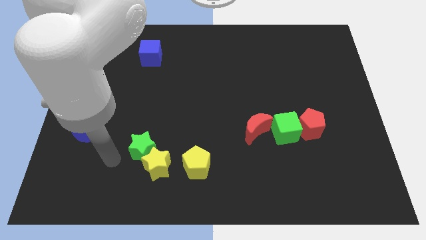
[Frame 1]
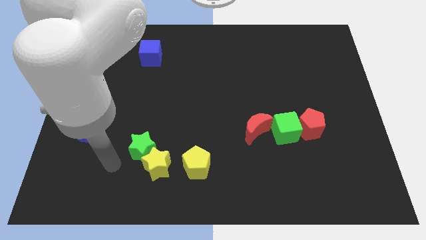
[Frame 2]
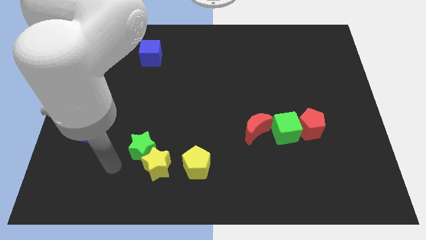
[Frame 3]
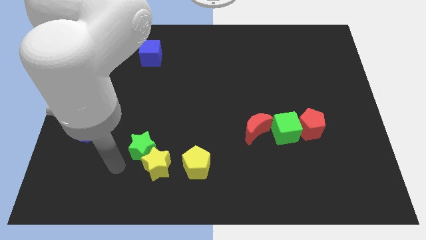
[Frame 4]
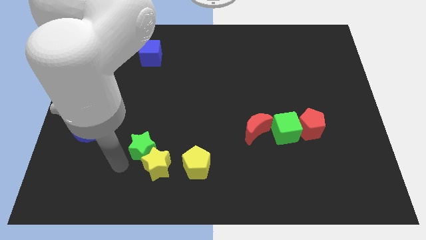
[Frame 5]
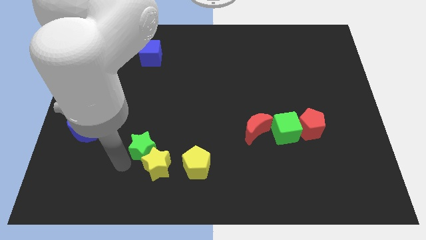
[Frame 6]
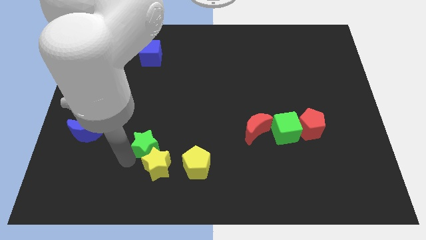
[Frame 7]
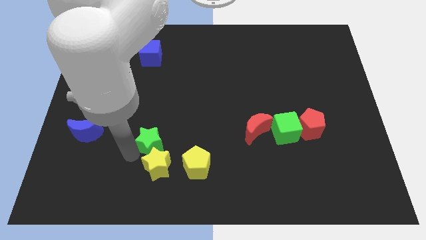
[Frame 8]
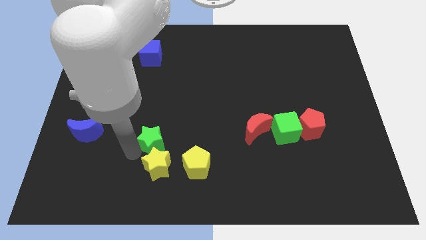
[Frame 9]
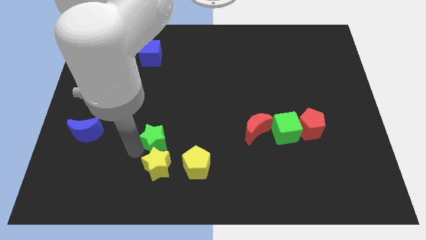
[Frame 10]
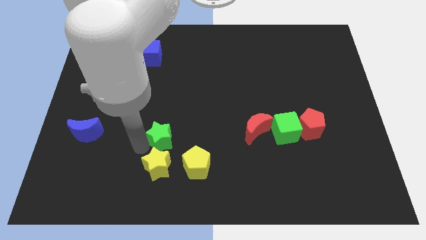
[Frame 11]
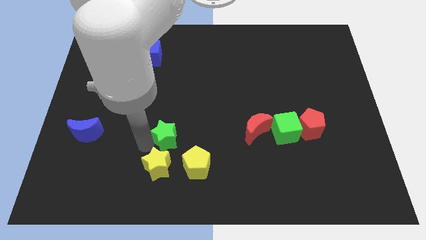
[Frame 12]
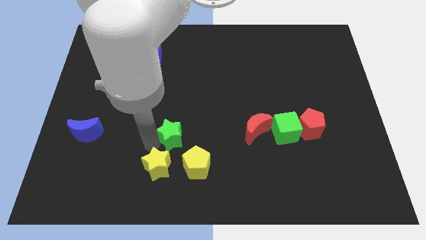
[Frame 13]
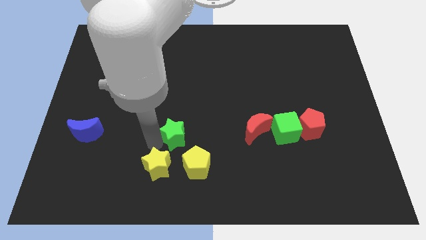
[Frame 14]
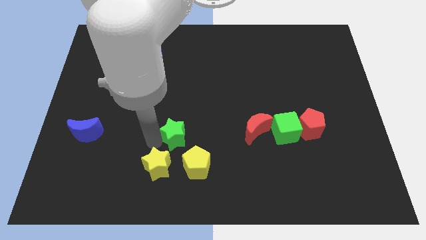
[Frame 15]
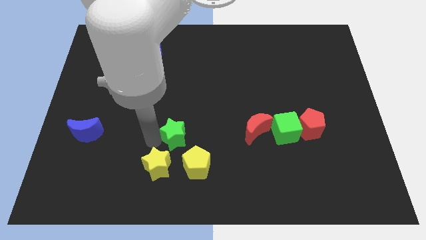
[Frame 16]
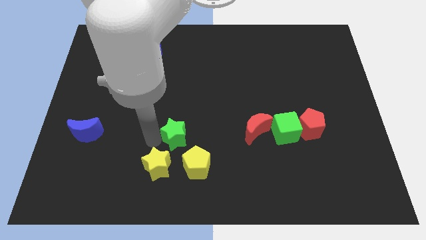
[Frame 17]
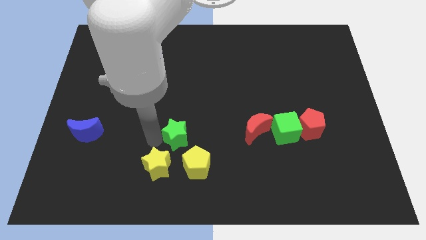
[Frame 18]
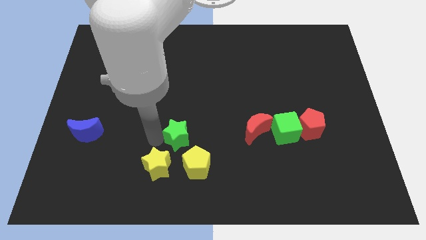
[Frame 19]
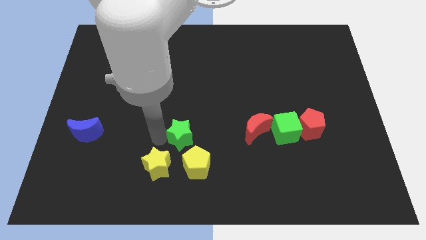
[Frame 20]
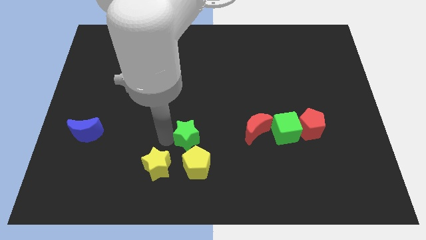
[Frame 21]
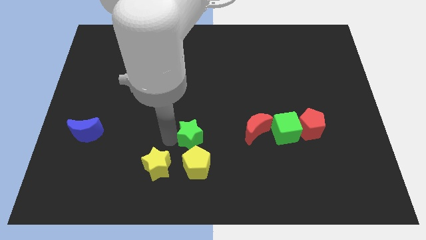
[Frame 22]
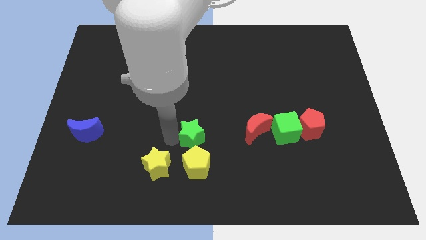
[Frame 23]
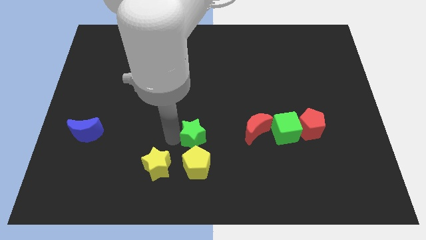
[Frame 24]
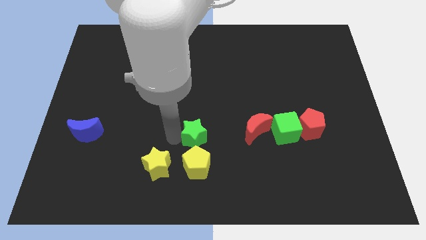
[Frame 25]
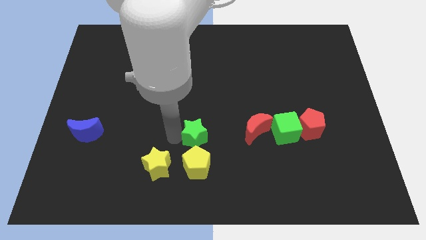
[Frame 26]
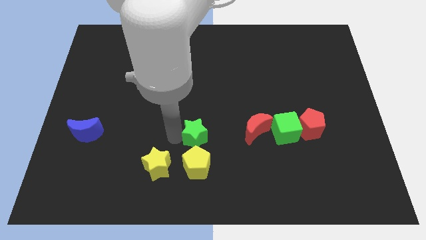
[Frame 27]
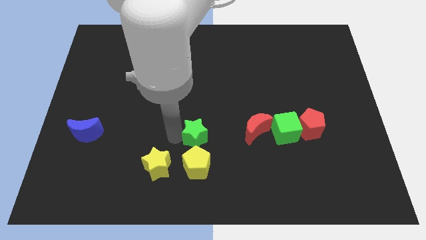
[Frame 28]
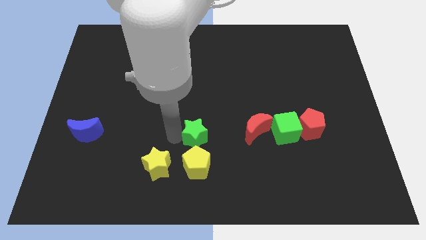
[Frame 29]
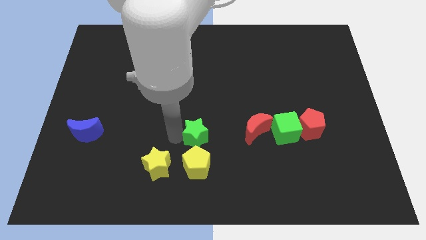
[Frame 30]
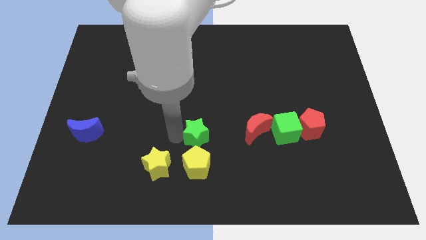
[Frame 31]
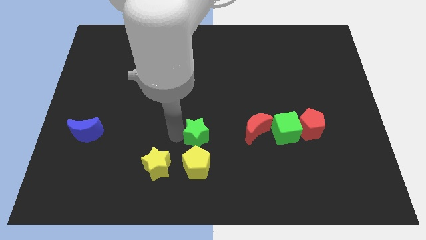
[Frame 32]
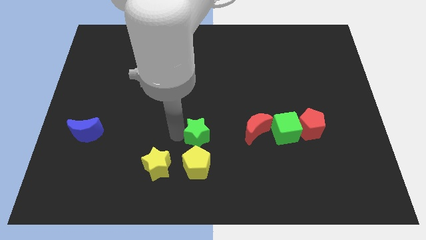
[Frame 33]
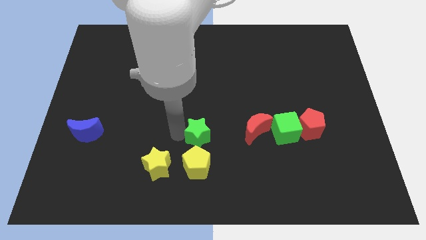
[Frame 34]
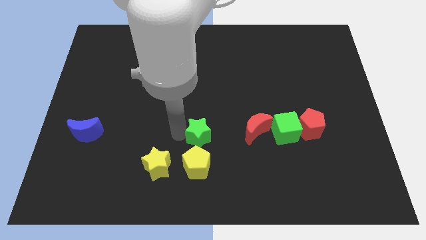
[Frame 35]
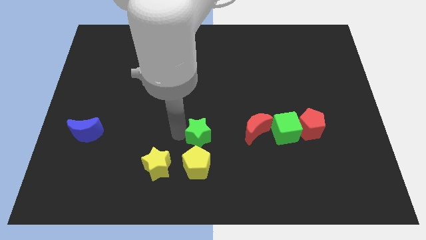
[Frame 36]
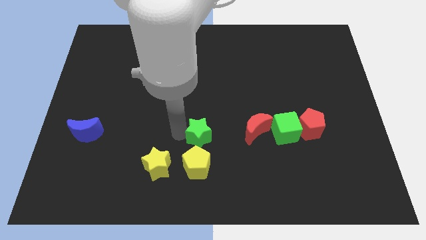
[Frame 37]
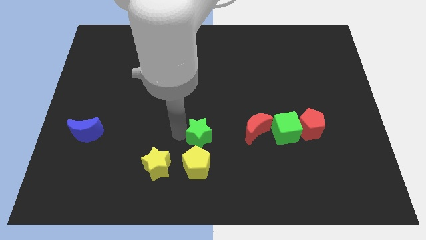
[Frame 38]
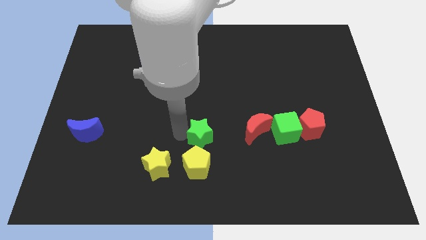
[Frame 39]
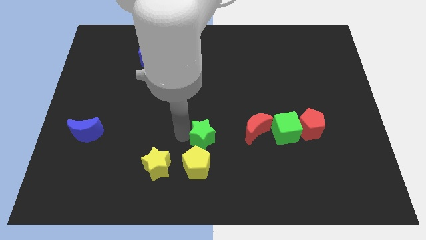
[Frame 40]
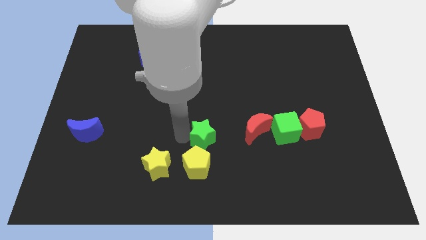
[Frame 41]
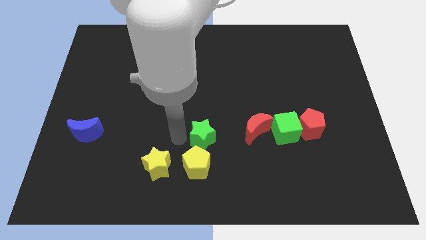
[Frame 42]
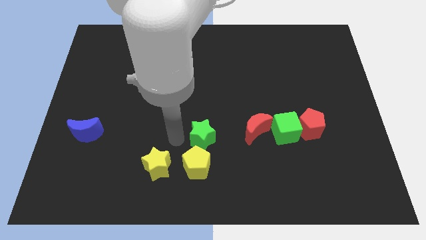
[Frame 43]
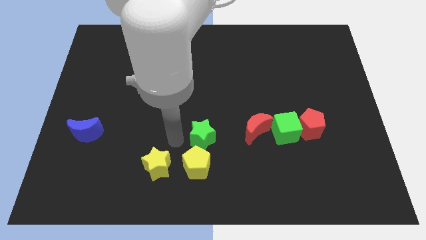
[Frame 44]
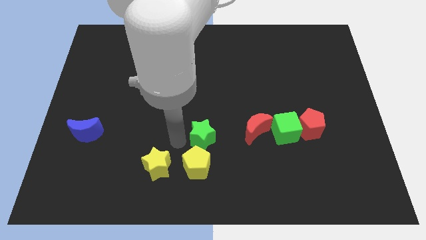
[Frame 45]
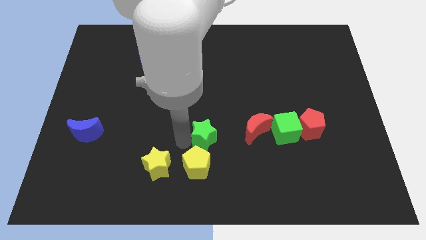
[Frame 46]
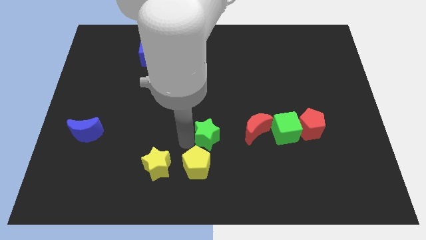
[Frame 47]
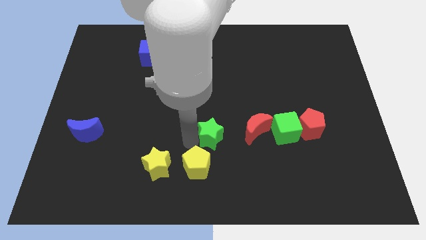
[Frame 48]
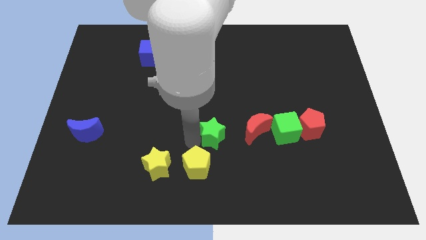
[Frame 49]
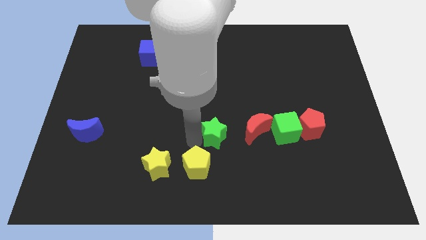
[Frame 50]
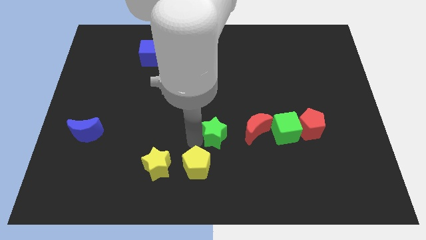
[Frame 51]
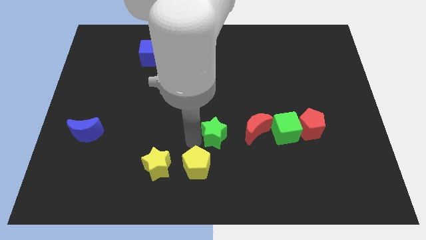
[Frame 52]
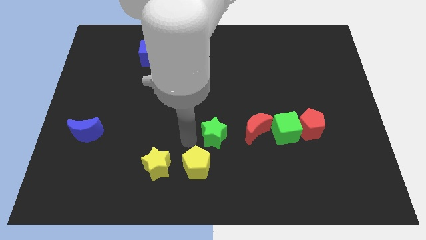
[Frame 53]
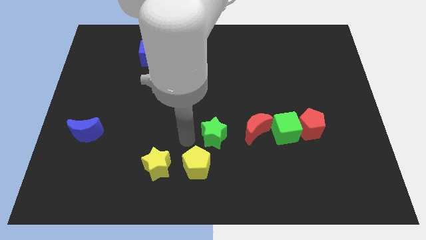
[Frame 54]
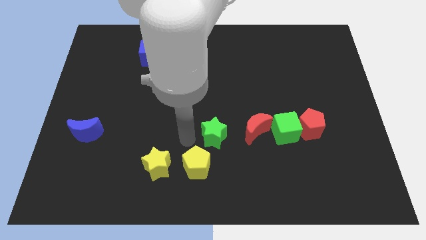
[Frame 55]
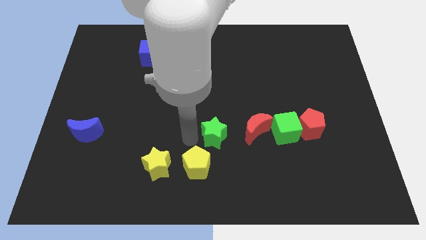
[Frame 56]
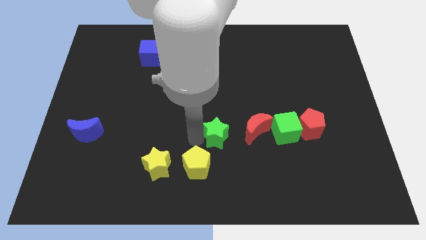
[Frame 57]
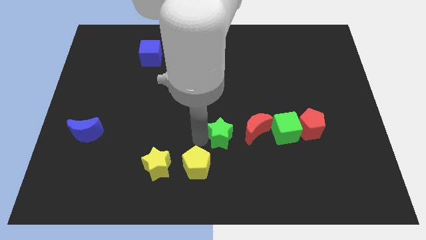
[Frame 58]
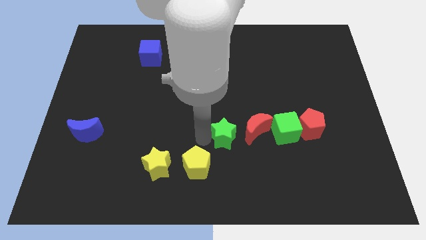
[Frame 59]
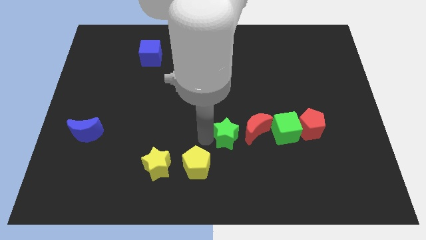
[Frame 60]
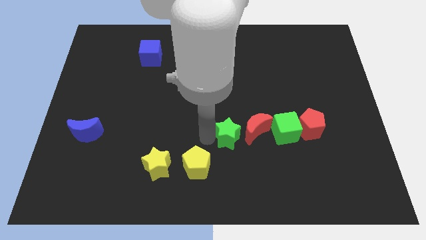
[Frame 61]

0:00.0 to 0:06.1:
place the green star to the left of the red moon

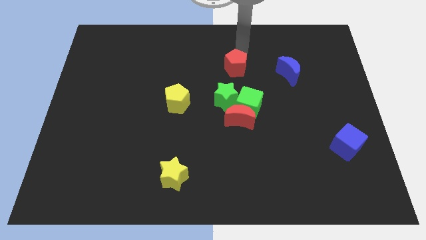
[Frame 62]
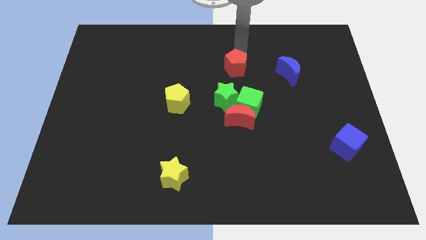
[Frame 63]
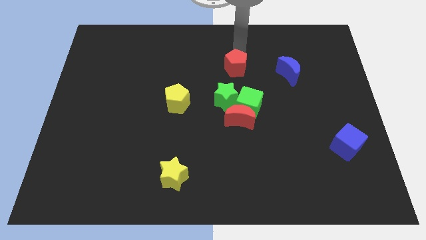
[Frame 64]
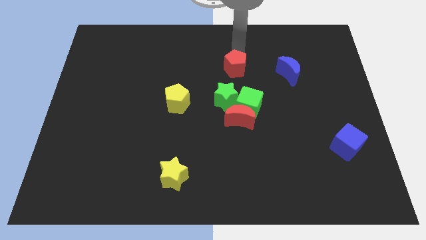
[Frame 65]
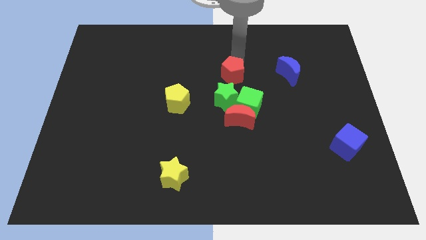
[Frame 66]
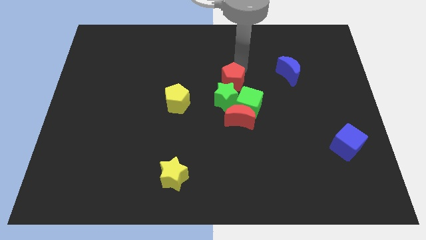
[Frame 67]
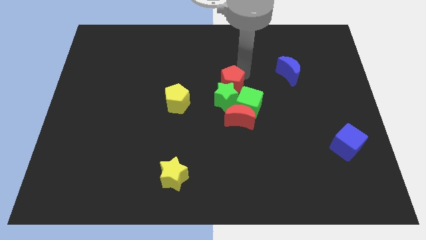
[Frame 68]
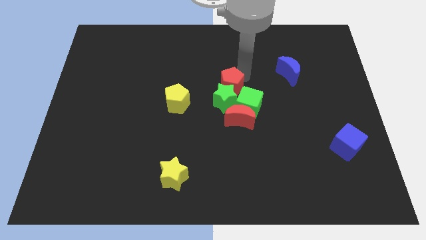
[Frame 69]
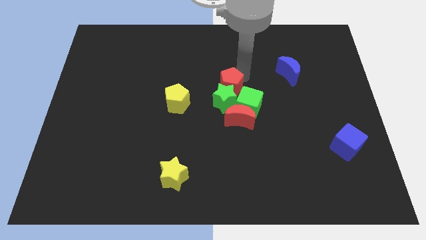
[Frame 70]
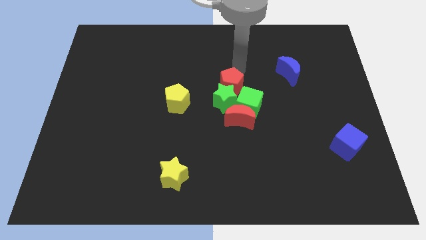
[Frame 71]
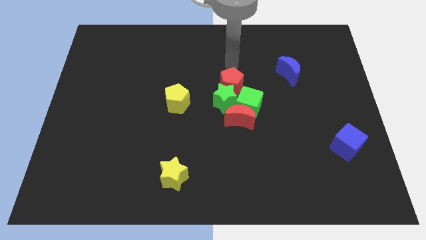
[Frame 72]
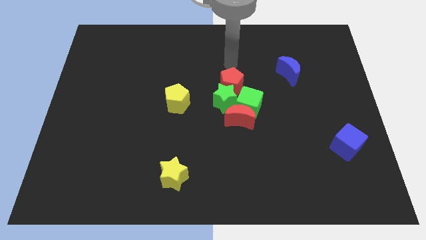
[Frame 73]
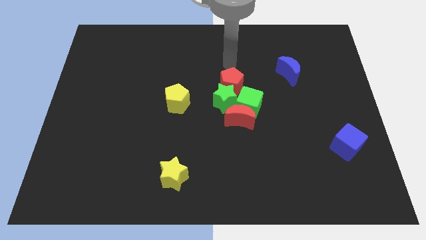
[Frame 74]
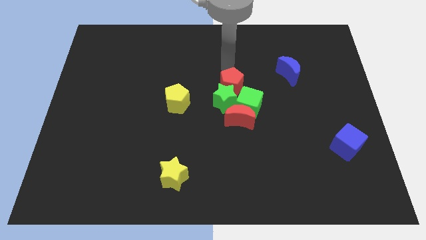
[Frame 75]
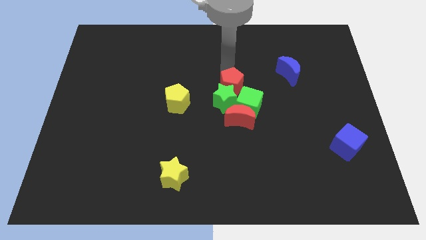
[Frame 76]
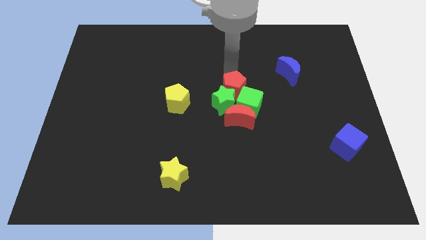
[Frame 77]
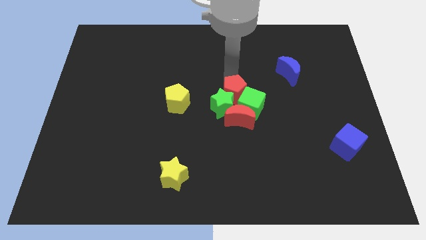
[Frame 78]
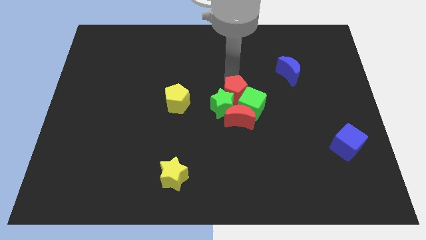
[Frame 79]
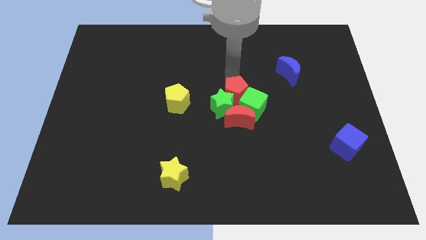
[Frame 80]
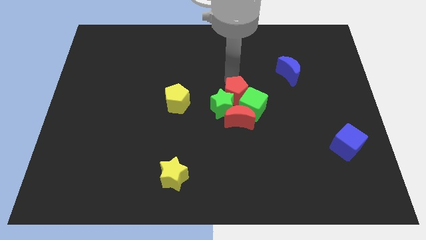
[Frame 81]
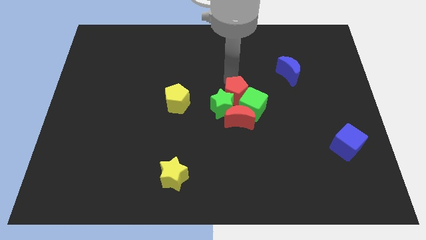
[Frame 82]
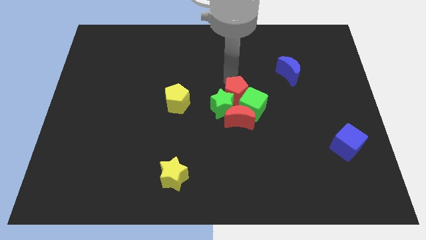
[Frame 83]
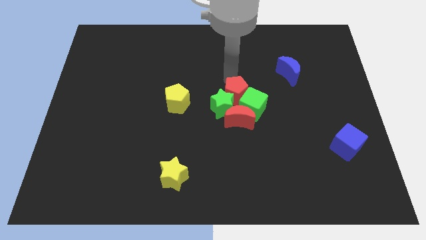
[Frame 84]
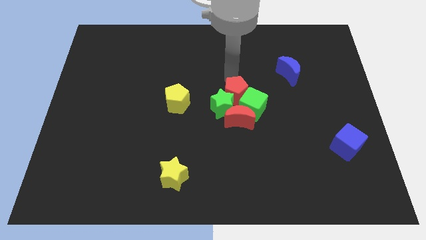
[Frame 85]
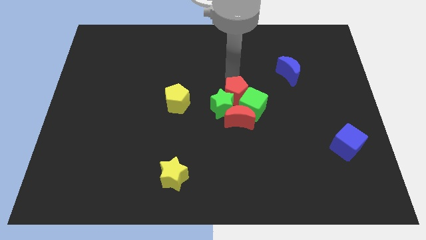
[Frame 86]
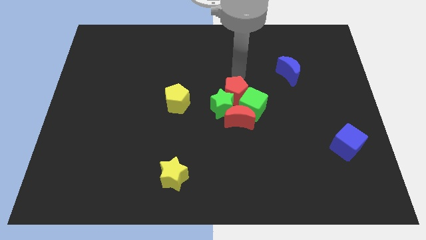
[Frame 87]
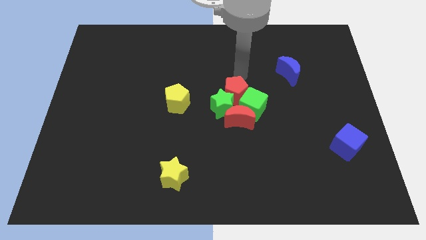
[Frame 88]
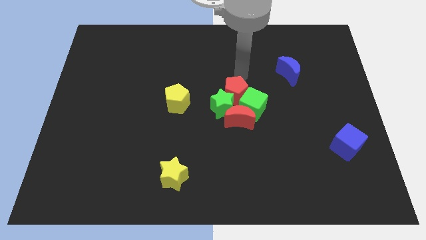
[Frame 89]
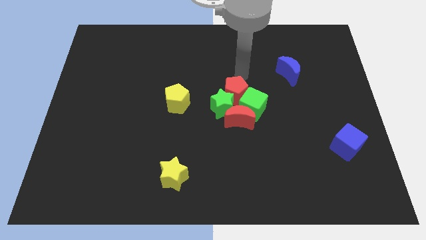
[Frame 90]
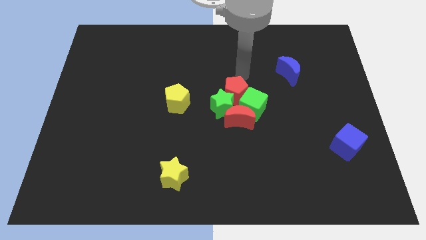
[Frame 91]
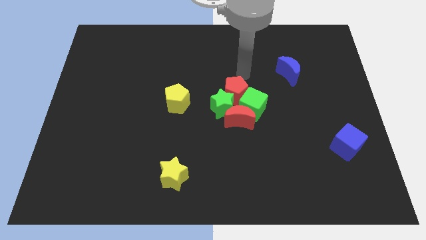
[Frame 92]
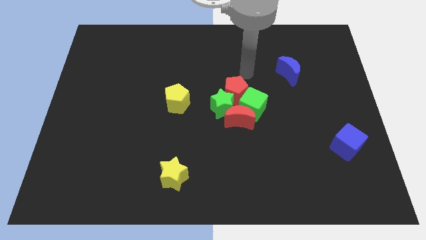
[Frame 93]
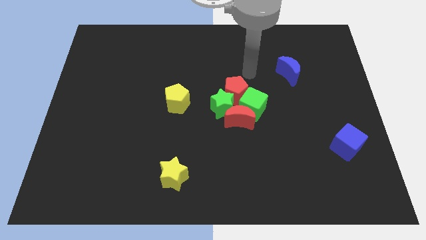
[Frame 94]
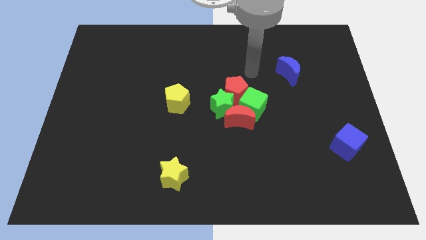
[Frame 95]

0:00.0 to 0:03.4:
push the red pentagon into the group of blocks
